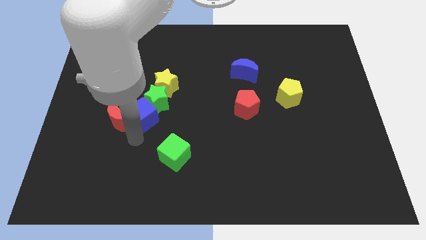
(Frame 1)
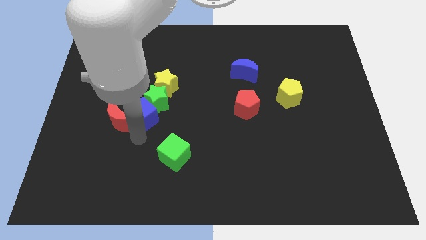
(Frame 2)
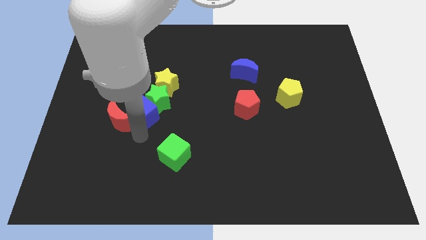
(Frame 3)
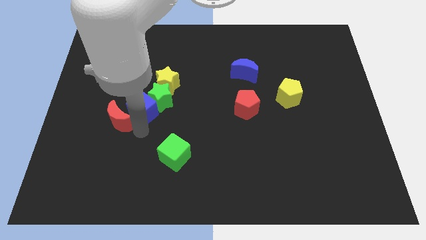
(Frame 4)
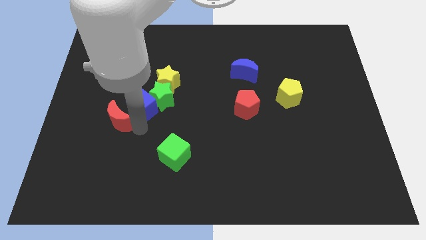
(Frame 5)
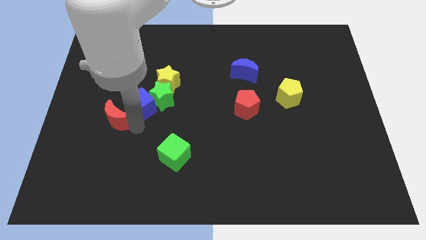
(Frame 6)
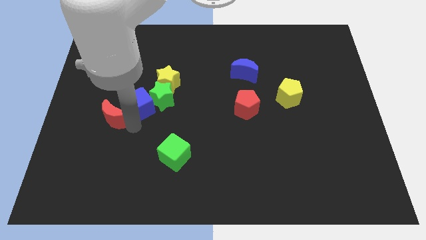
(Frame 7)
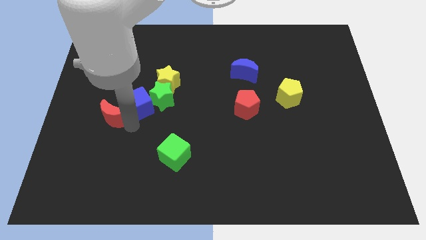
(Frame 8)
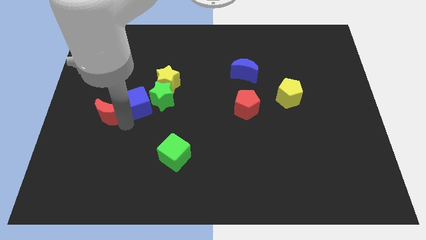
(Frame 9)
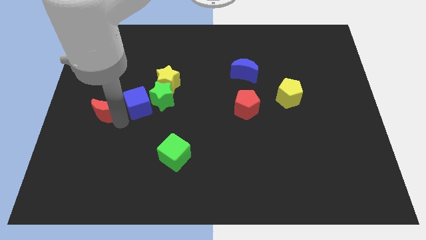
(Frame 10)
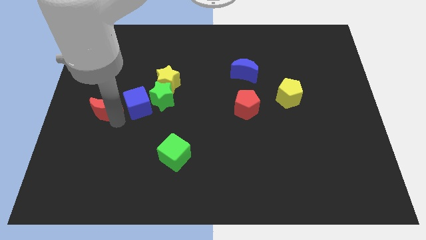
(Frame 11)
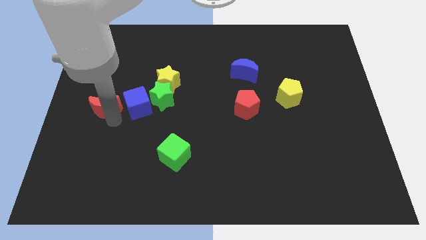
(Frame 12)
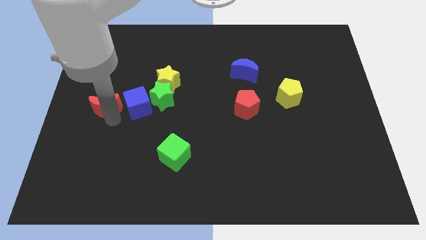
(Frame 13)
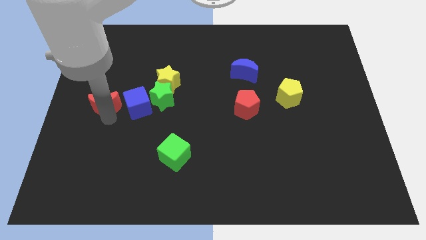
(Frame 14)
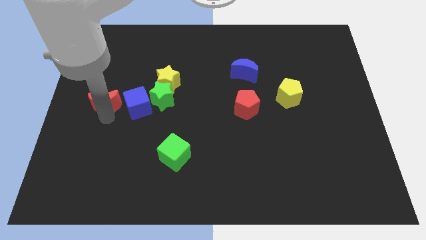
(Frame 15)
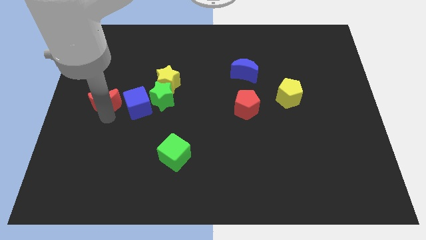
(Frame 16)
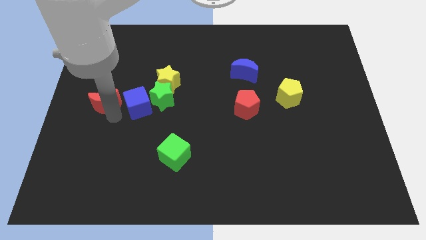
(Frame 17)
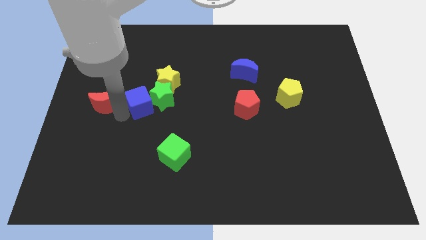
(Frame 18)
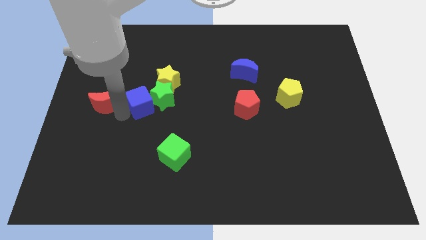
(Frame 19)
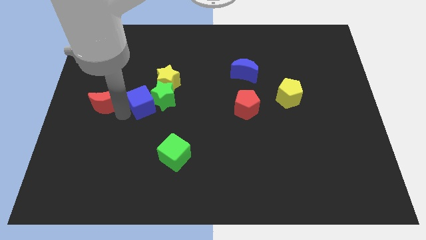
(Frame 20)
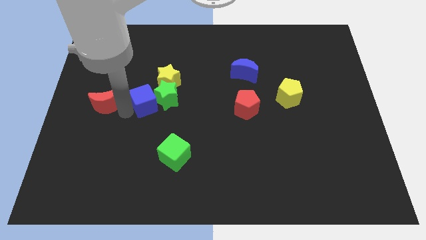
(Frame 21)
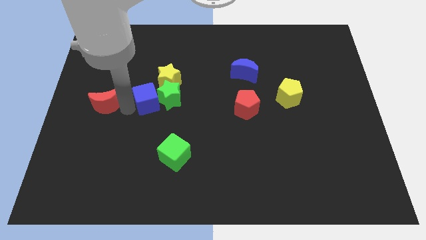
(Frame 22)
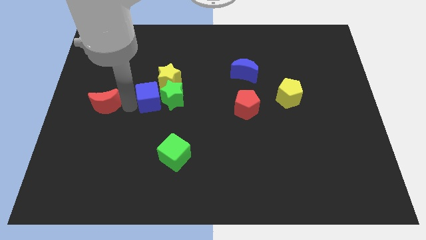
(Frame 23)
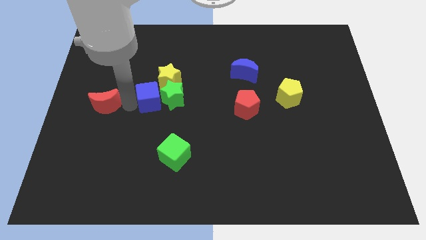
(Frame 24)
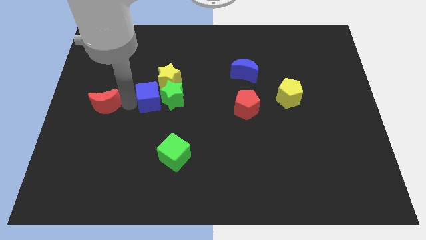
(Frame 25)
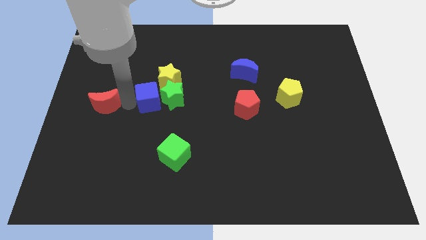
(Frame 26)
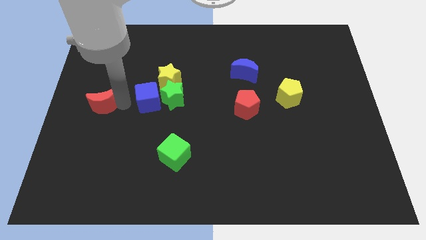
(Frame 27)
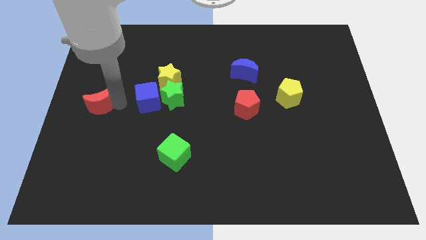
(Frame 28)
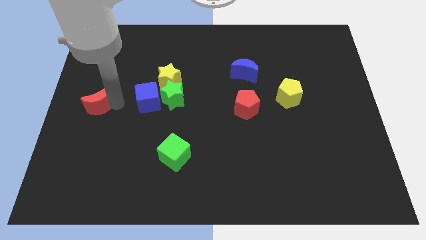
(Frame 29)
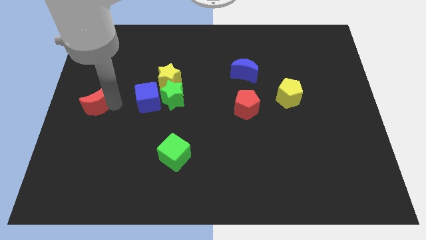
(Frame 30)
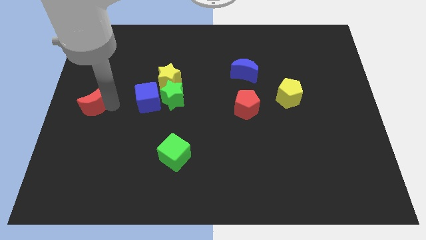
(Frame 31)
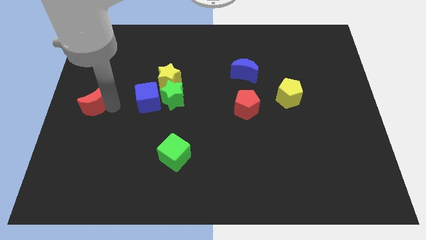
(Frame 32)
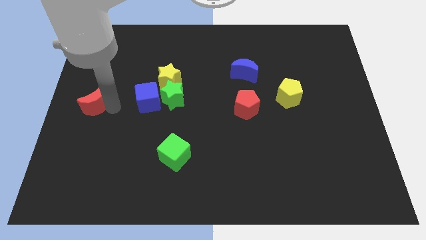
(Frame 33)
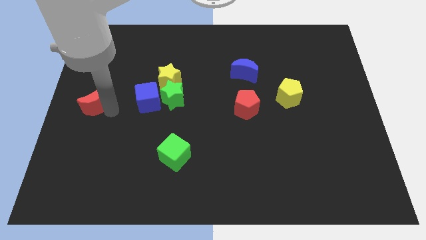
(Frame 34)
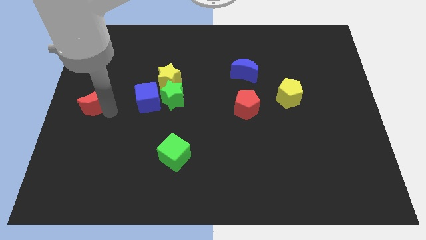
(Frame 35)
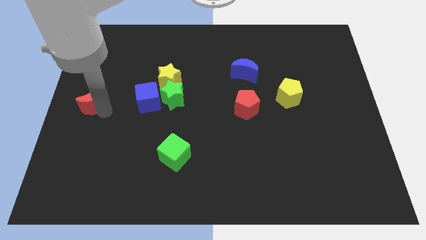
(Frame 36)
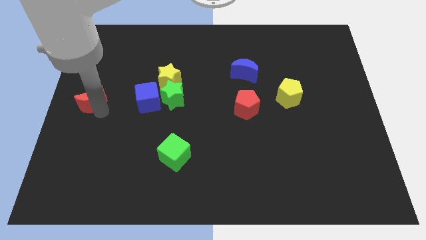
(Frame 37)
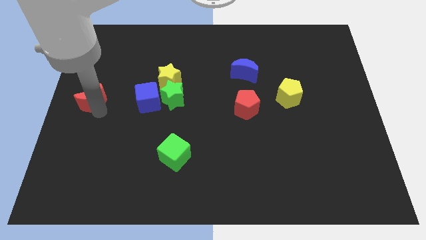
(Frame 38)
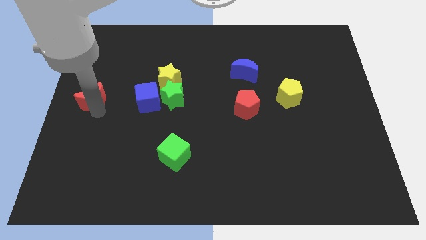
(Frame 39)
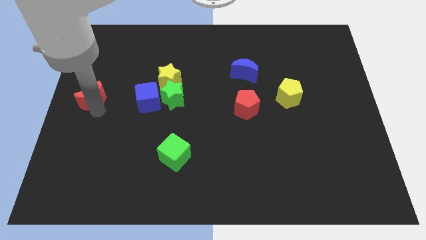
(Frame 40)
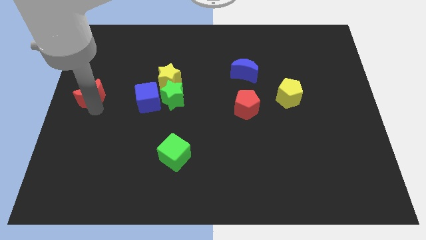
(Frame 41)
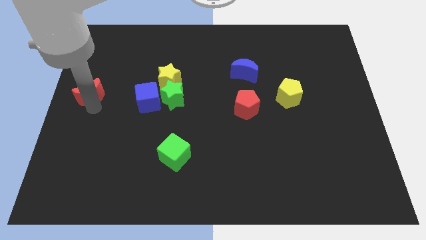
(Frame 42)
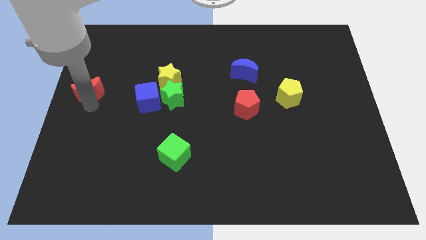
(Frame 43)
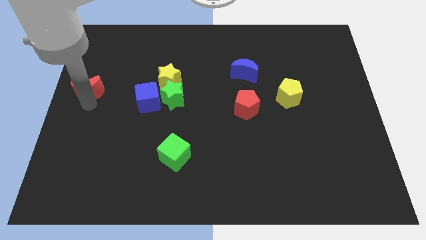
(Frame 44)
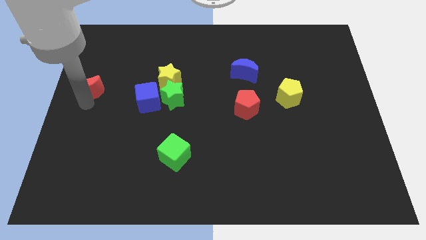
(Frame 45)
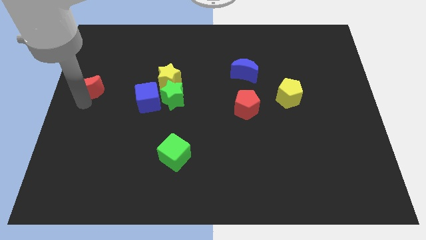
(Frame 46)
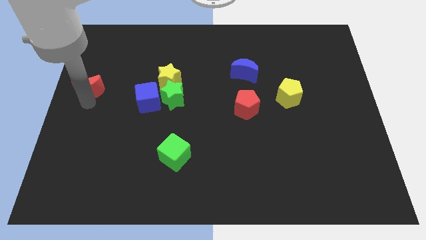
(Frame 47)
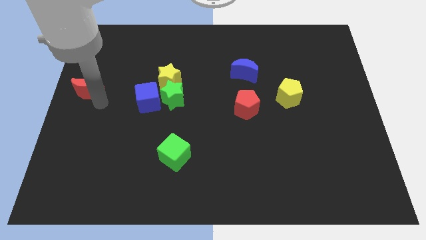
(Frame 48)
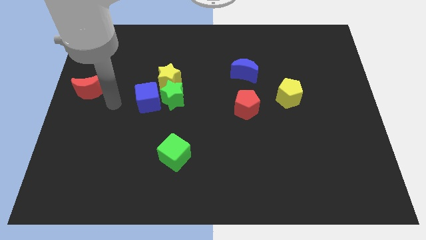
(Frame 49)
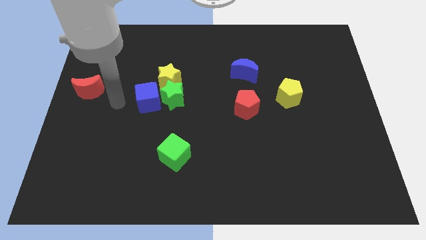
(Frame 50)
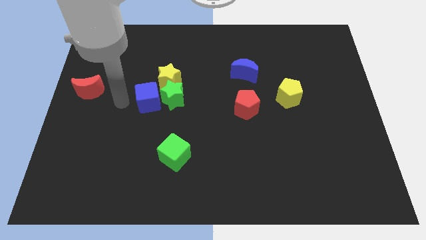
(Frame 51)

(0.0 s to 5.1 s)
separate th ered crescent to the left side

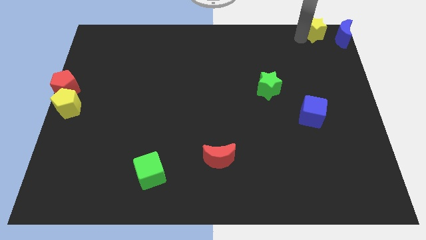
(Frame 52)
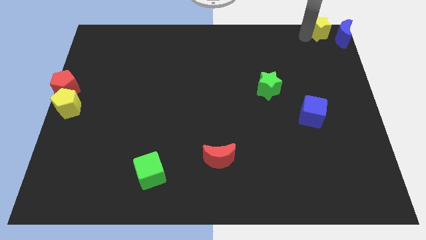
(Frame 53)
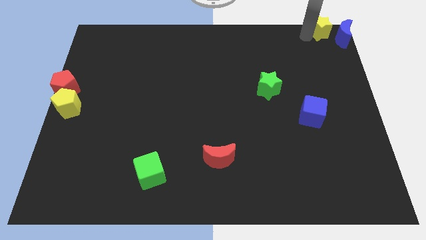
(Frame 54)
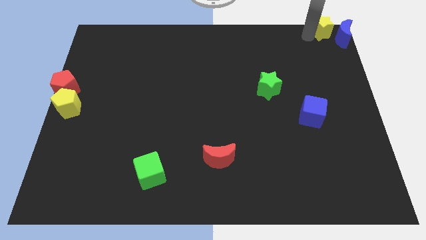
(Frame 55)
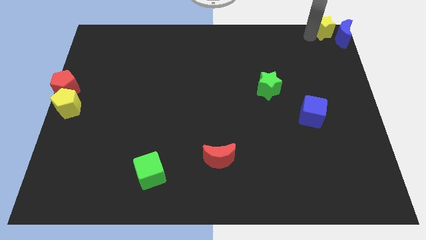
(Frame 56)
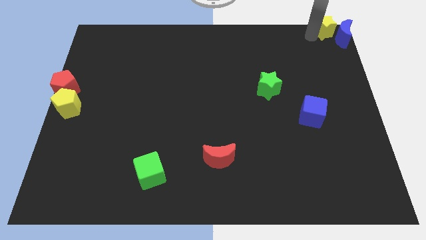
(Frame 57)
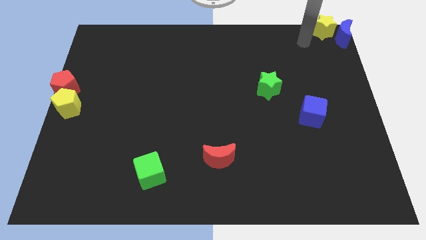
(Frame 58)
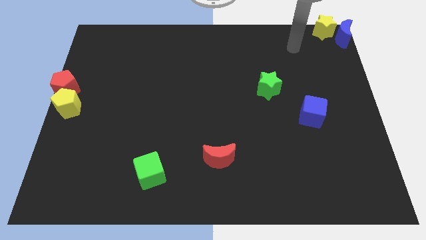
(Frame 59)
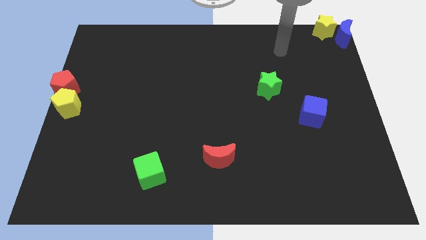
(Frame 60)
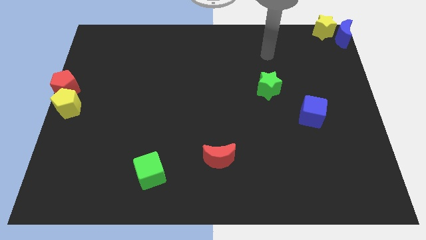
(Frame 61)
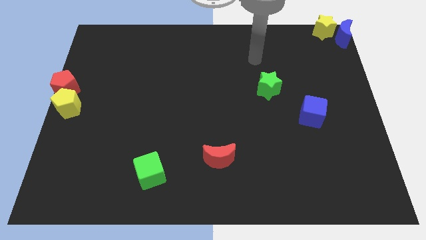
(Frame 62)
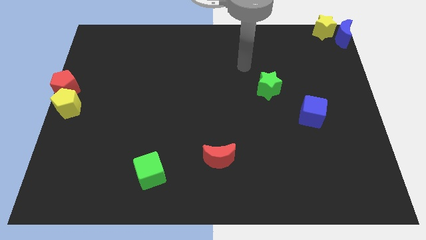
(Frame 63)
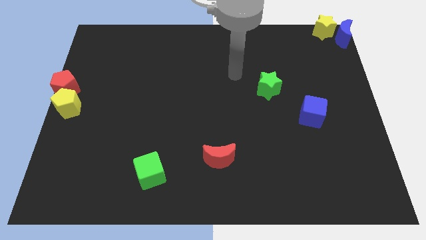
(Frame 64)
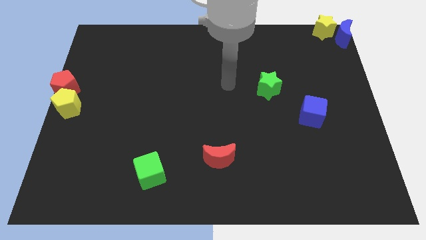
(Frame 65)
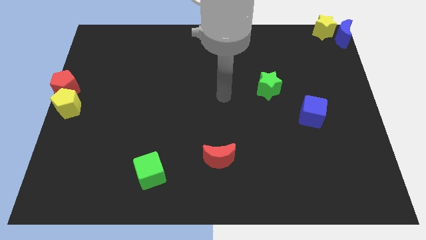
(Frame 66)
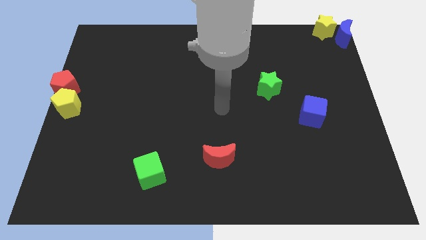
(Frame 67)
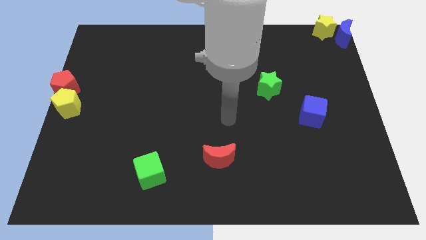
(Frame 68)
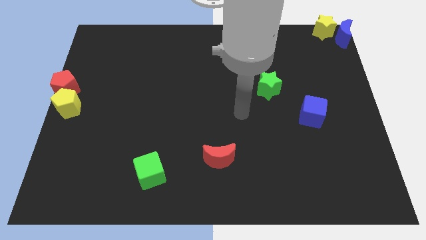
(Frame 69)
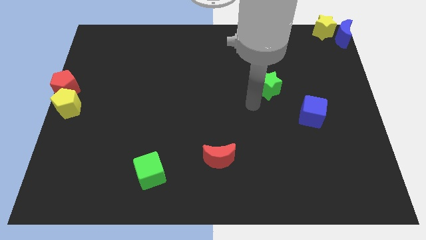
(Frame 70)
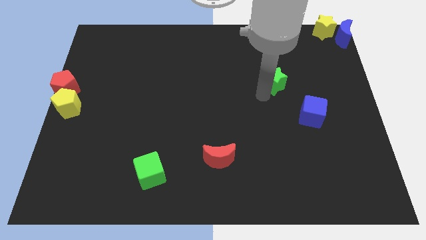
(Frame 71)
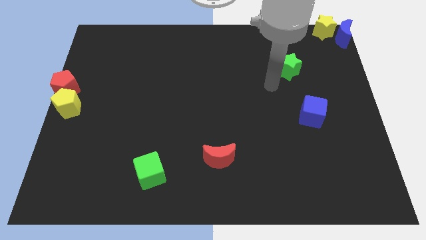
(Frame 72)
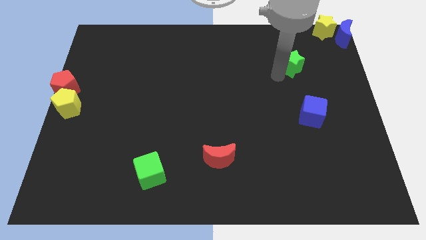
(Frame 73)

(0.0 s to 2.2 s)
move green star towards yellow star

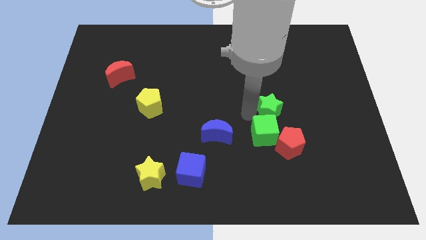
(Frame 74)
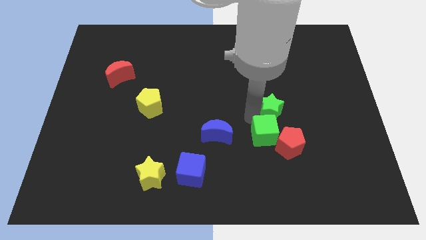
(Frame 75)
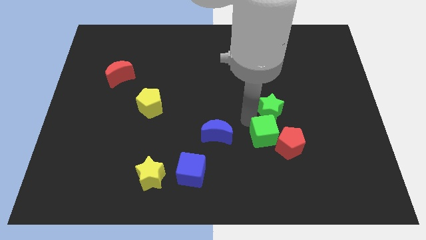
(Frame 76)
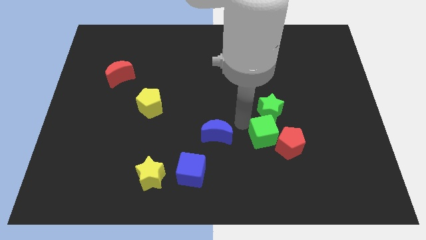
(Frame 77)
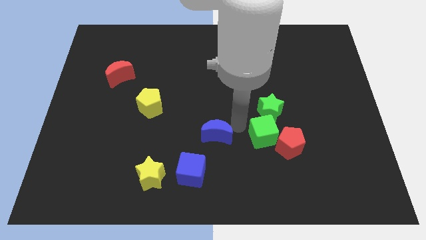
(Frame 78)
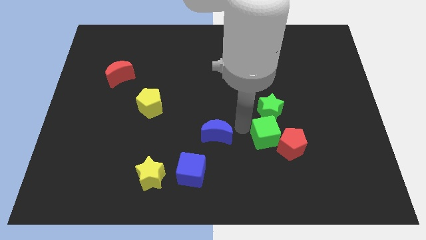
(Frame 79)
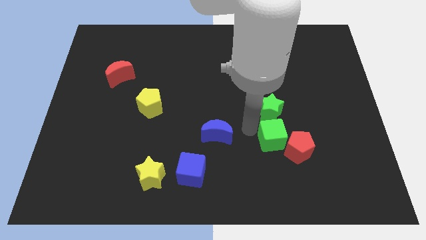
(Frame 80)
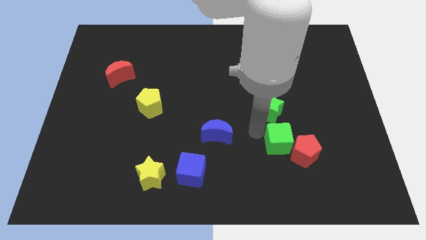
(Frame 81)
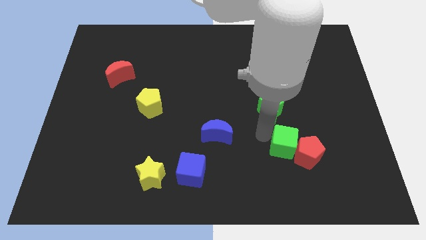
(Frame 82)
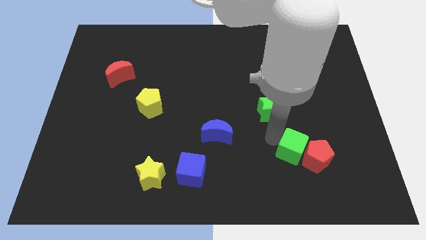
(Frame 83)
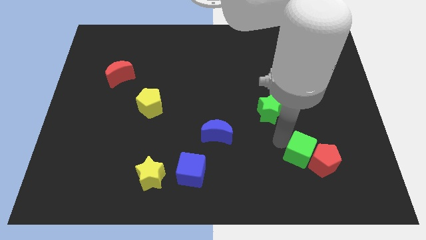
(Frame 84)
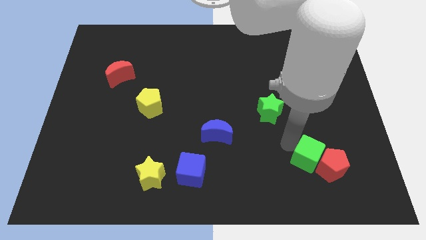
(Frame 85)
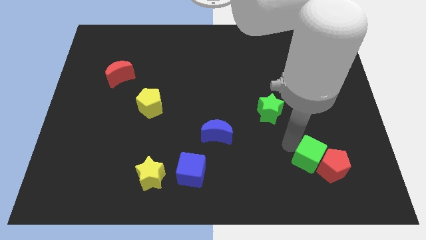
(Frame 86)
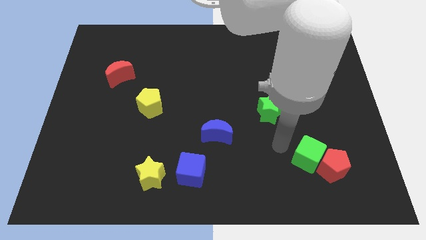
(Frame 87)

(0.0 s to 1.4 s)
push the green cube into the red pentagon

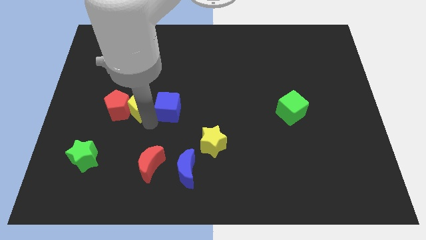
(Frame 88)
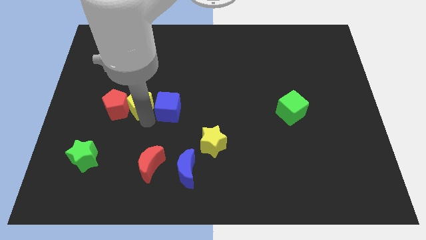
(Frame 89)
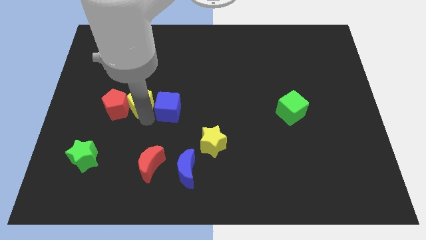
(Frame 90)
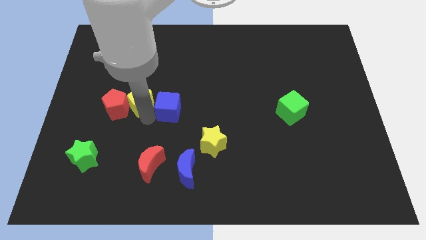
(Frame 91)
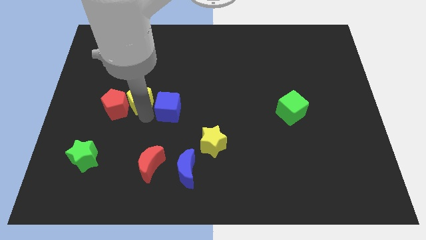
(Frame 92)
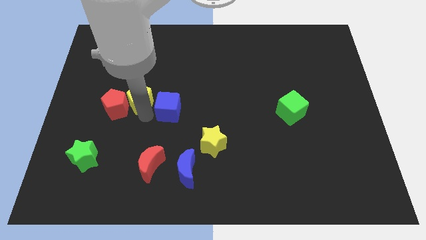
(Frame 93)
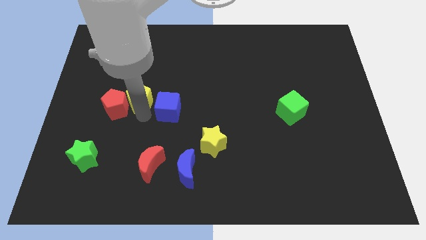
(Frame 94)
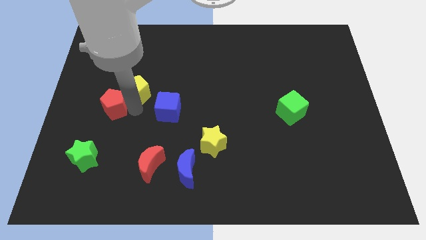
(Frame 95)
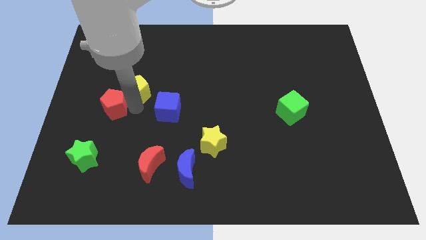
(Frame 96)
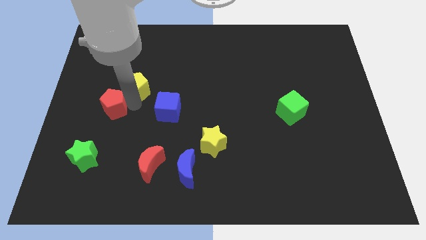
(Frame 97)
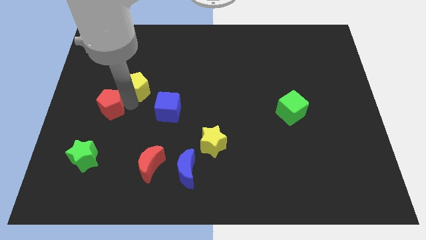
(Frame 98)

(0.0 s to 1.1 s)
slightly move the yellow pentagon upwards
